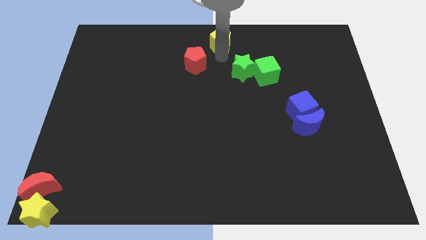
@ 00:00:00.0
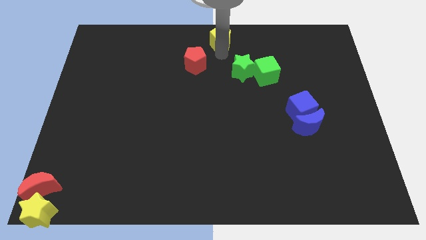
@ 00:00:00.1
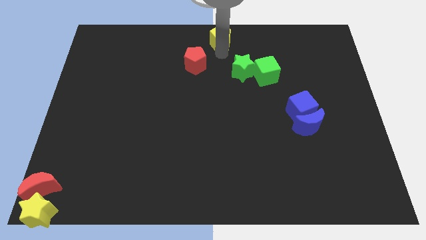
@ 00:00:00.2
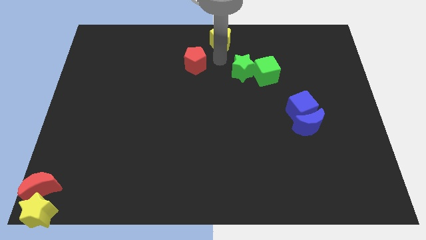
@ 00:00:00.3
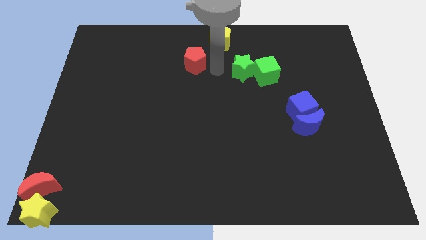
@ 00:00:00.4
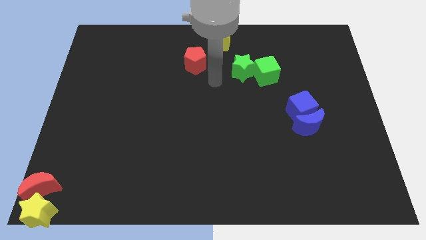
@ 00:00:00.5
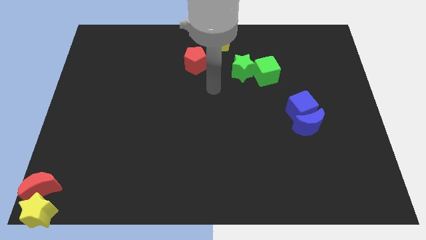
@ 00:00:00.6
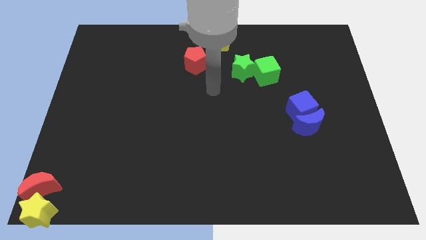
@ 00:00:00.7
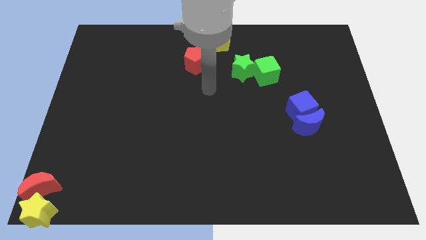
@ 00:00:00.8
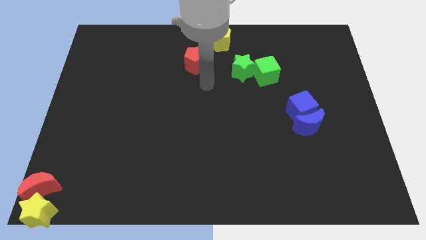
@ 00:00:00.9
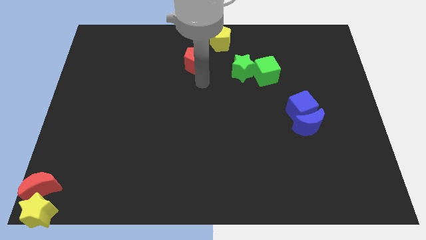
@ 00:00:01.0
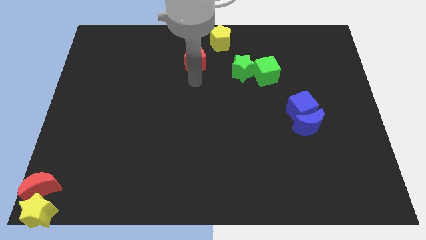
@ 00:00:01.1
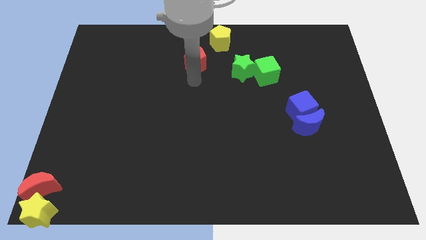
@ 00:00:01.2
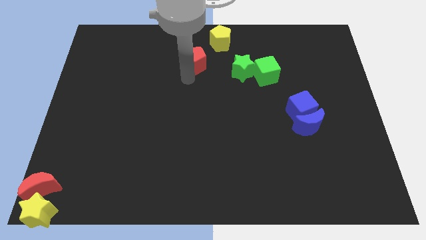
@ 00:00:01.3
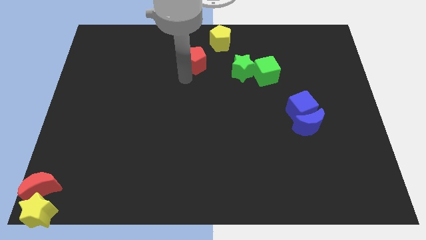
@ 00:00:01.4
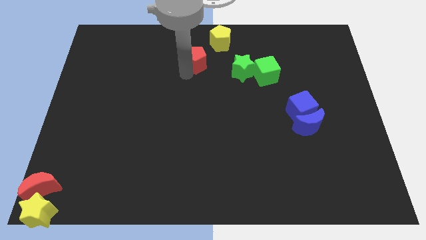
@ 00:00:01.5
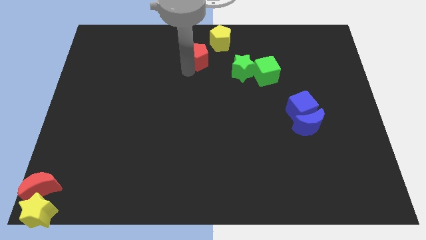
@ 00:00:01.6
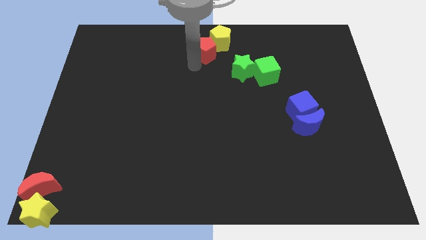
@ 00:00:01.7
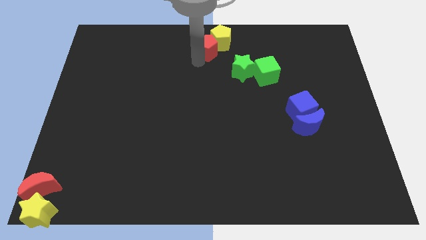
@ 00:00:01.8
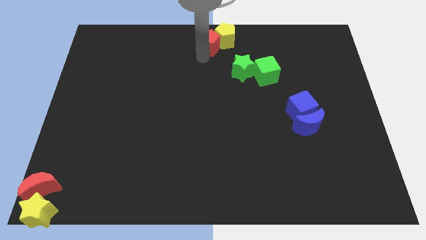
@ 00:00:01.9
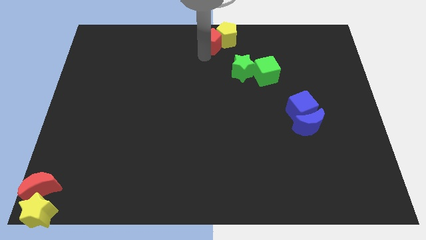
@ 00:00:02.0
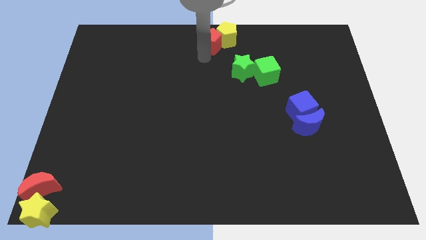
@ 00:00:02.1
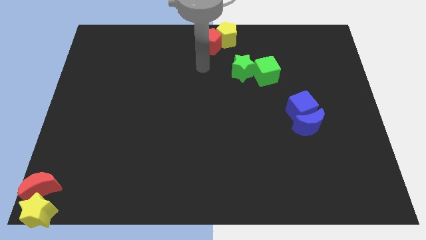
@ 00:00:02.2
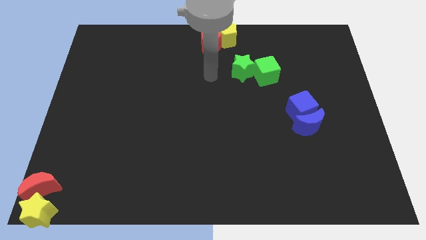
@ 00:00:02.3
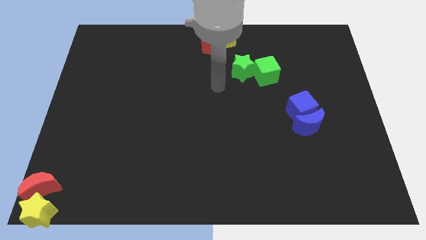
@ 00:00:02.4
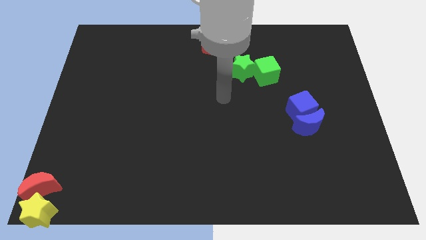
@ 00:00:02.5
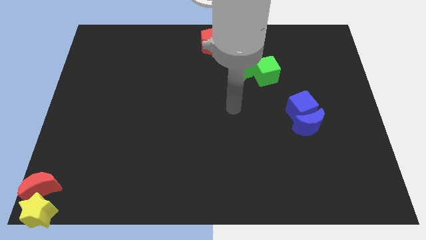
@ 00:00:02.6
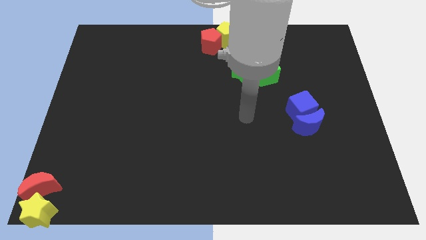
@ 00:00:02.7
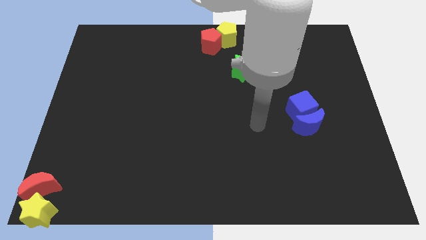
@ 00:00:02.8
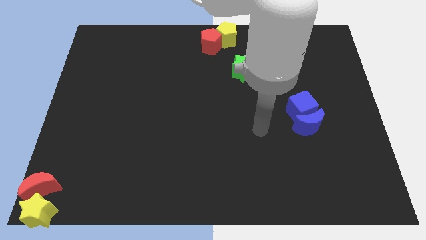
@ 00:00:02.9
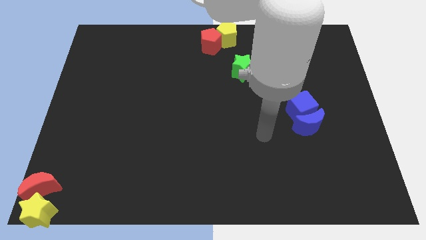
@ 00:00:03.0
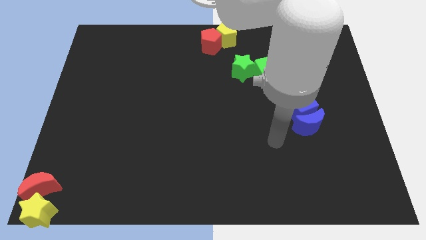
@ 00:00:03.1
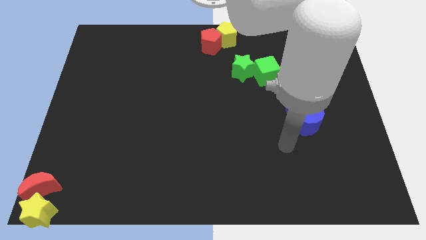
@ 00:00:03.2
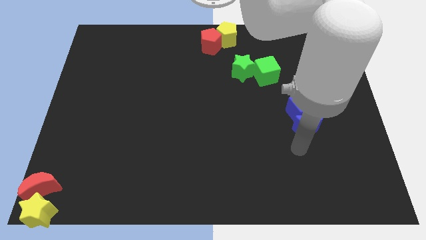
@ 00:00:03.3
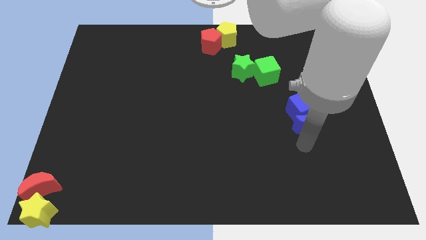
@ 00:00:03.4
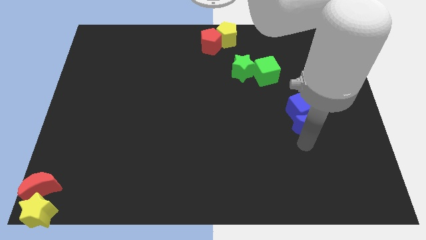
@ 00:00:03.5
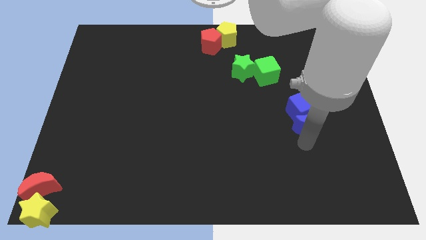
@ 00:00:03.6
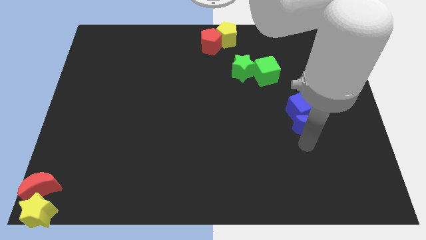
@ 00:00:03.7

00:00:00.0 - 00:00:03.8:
place the red pentagon at the top center

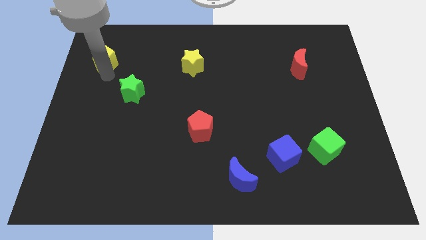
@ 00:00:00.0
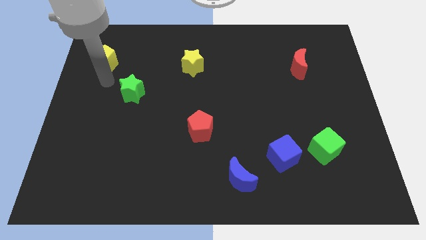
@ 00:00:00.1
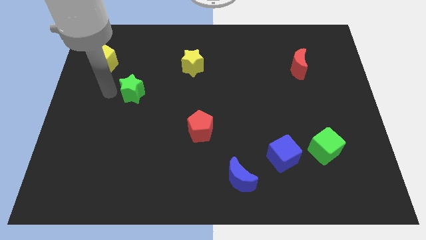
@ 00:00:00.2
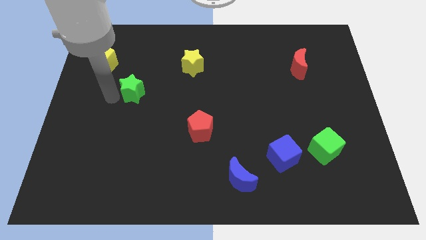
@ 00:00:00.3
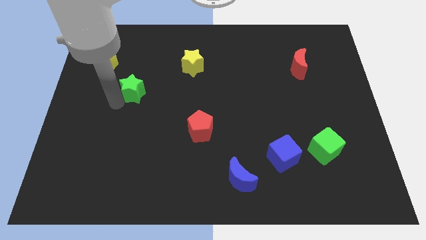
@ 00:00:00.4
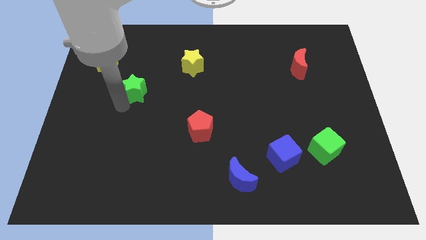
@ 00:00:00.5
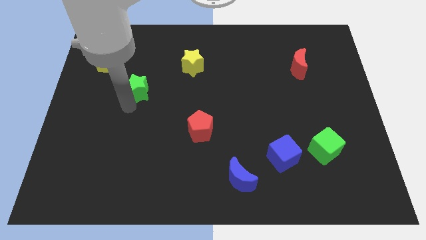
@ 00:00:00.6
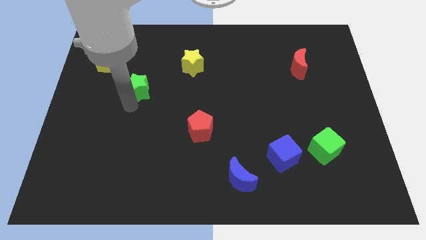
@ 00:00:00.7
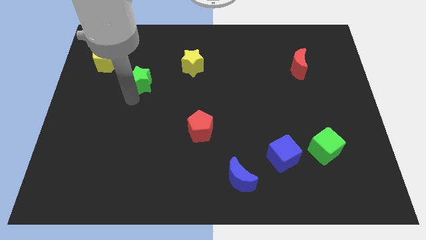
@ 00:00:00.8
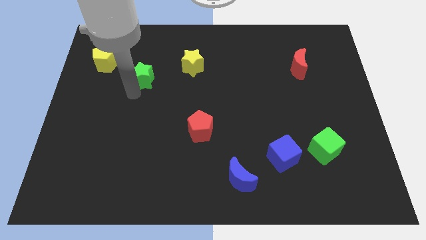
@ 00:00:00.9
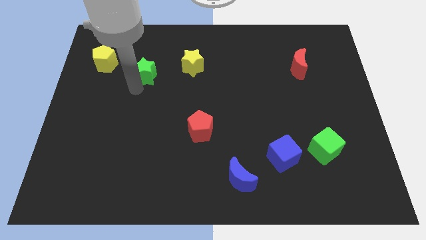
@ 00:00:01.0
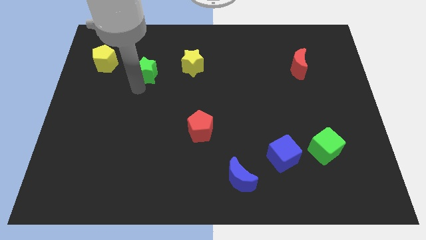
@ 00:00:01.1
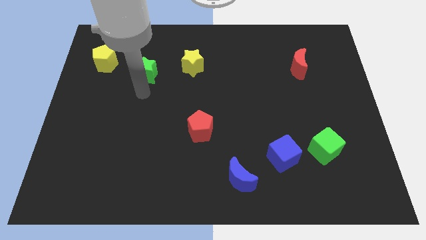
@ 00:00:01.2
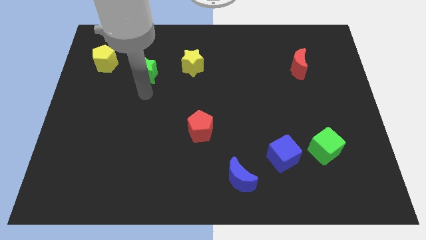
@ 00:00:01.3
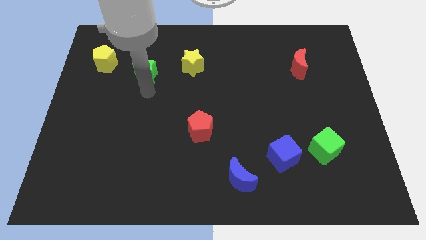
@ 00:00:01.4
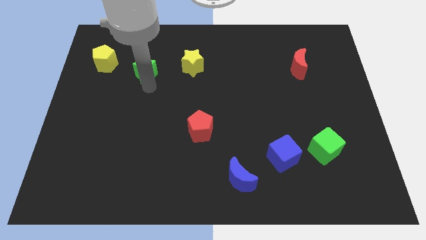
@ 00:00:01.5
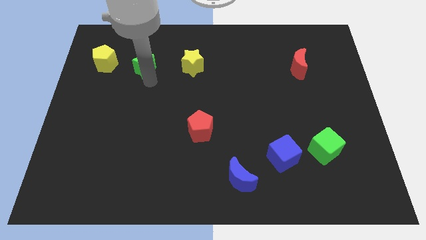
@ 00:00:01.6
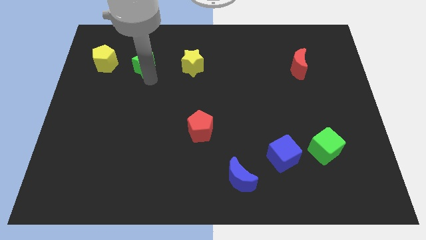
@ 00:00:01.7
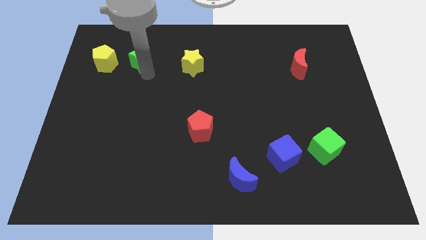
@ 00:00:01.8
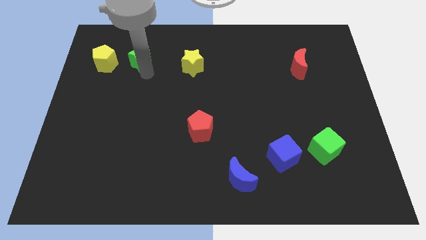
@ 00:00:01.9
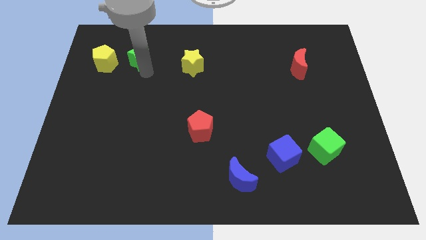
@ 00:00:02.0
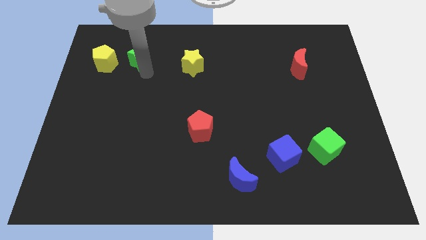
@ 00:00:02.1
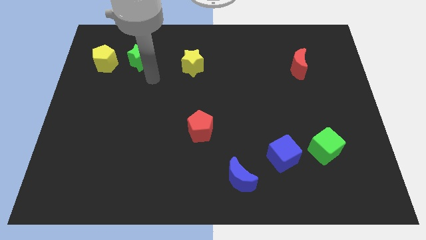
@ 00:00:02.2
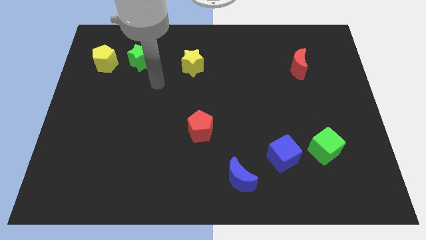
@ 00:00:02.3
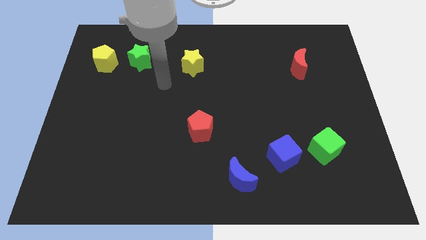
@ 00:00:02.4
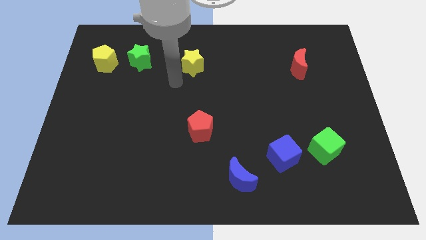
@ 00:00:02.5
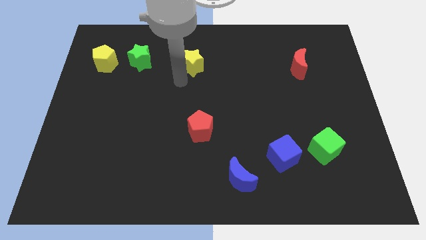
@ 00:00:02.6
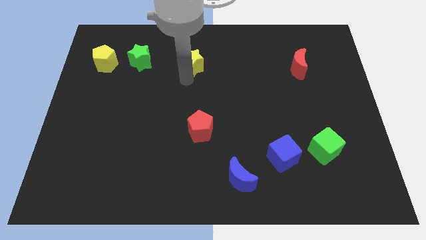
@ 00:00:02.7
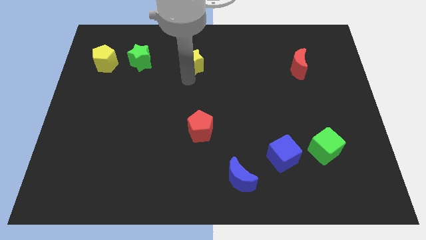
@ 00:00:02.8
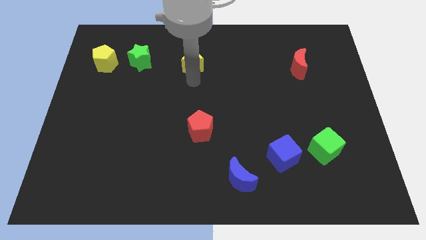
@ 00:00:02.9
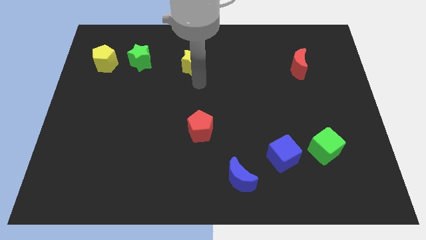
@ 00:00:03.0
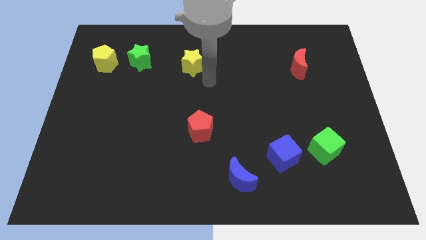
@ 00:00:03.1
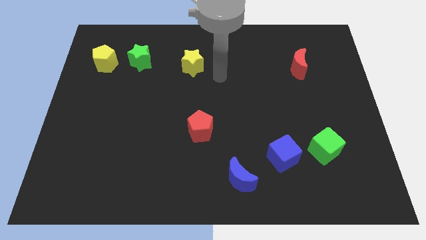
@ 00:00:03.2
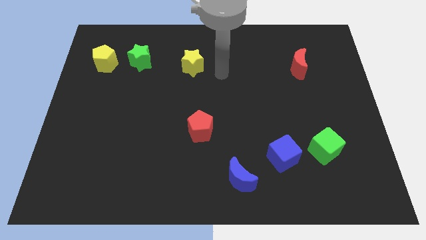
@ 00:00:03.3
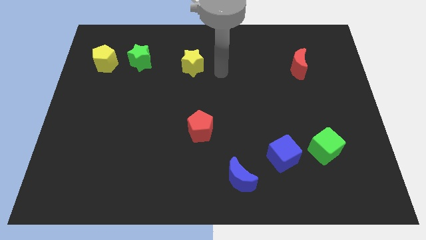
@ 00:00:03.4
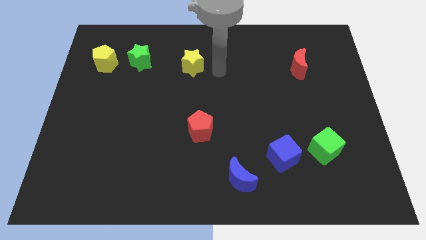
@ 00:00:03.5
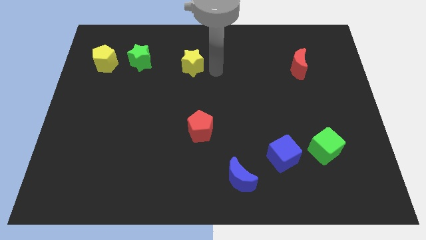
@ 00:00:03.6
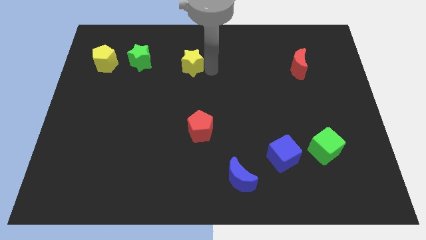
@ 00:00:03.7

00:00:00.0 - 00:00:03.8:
place the green star in between yellow pentagon and yellow star

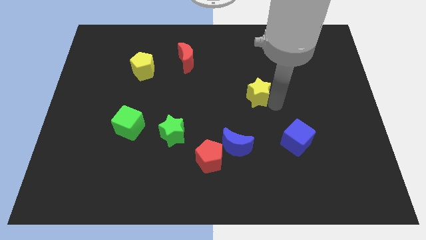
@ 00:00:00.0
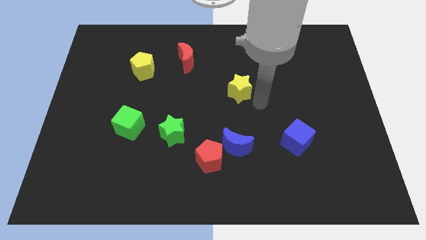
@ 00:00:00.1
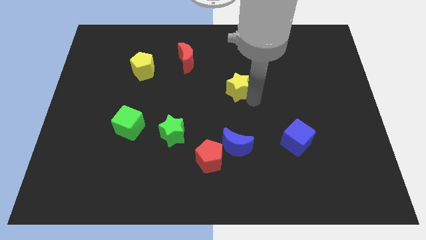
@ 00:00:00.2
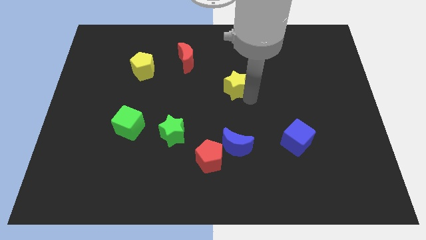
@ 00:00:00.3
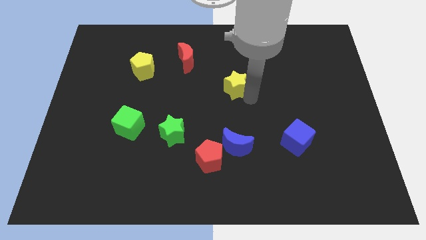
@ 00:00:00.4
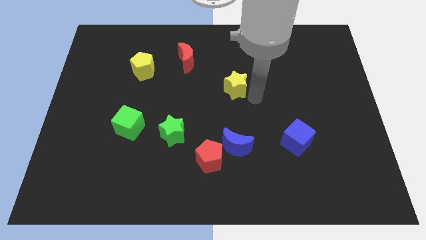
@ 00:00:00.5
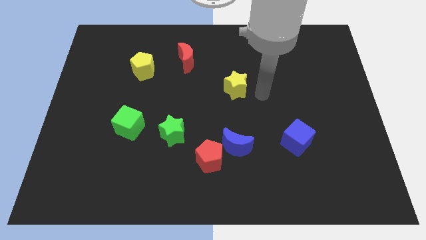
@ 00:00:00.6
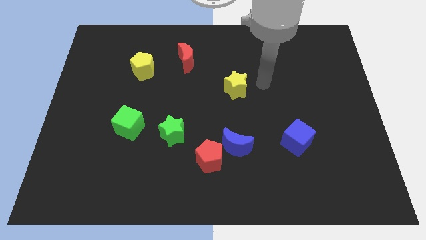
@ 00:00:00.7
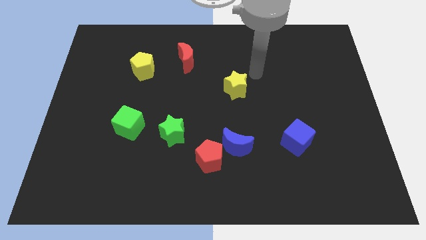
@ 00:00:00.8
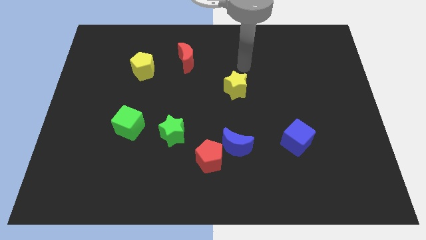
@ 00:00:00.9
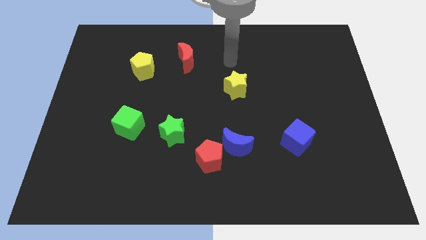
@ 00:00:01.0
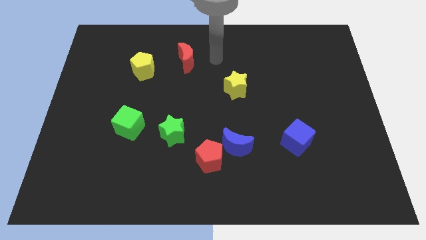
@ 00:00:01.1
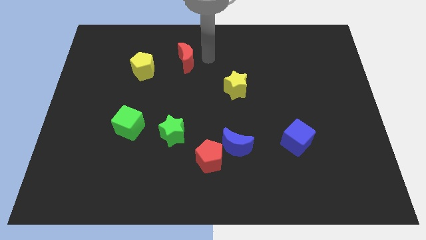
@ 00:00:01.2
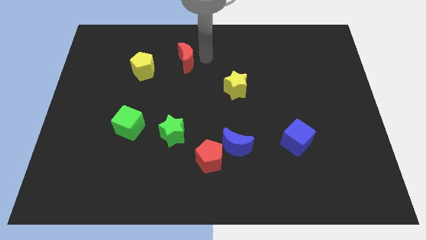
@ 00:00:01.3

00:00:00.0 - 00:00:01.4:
push the yellow star vertically on top of the blue crescent
